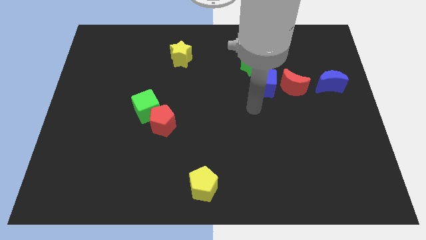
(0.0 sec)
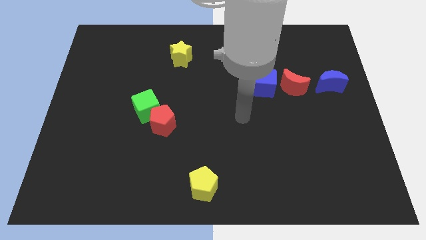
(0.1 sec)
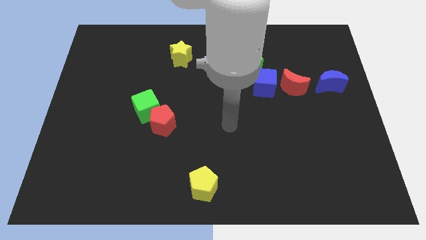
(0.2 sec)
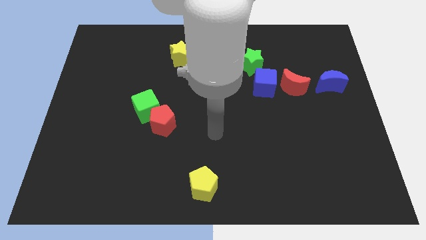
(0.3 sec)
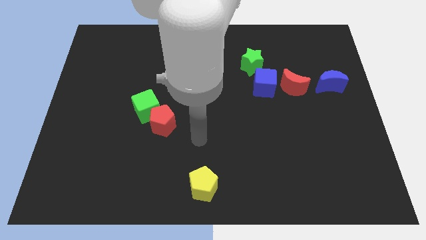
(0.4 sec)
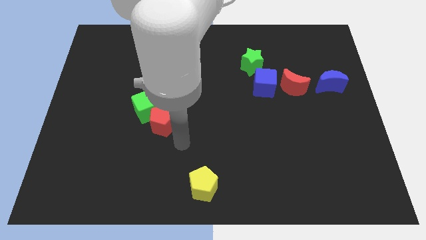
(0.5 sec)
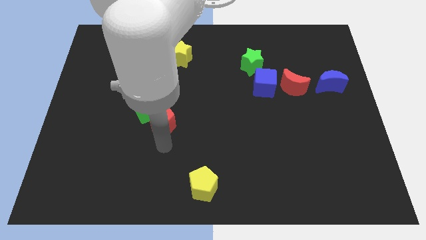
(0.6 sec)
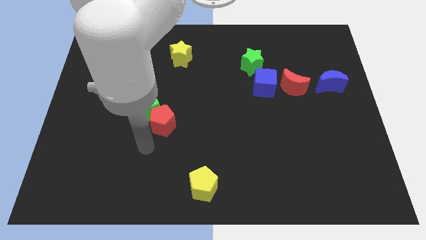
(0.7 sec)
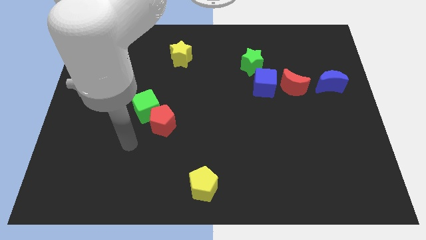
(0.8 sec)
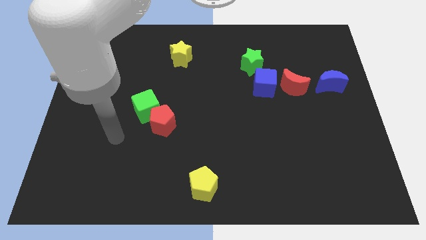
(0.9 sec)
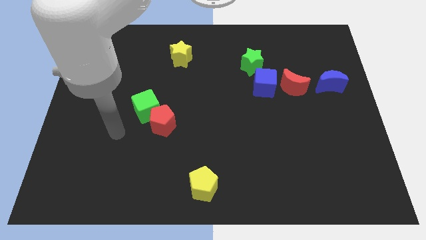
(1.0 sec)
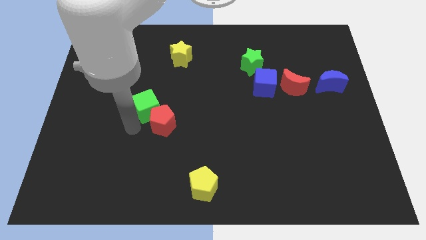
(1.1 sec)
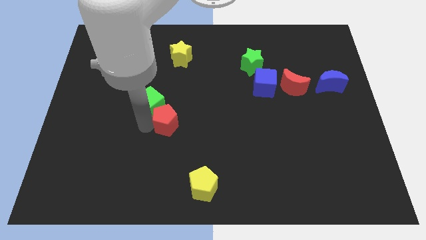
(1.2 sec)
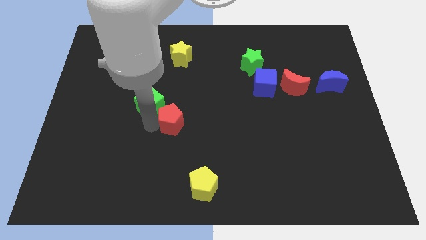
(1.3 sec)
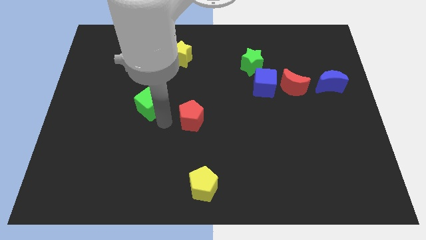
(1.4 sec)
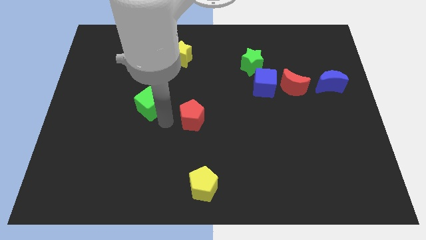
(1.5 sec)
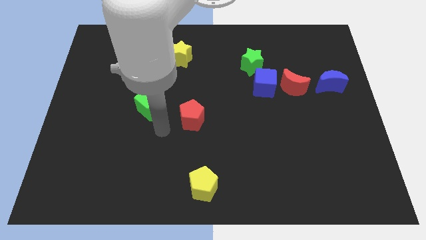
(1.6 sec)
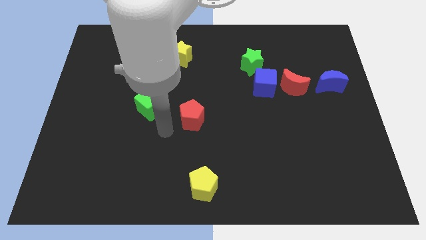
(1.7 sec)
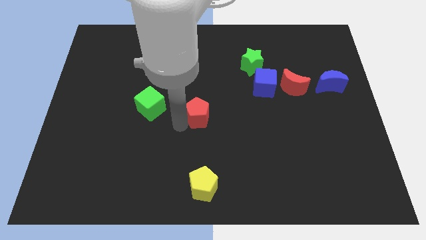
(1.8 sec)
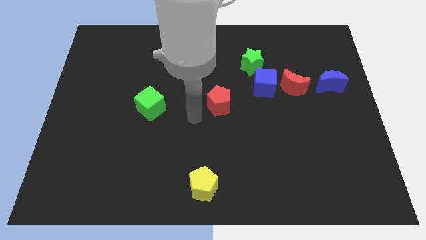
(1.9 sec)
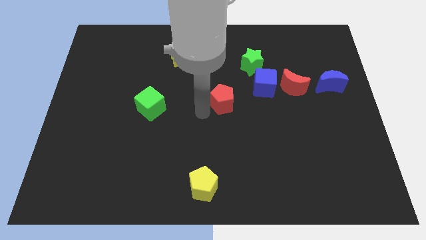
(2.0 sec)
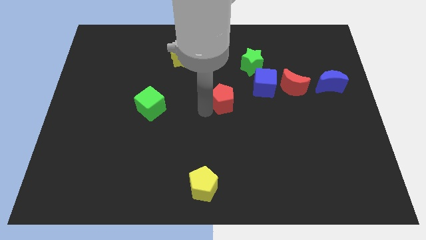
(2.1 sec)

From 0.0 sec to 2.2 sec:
separate the red pentagon from green cube

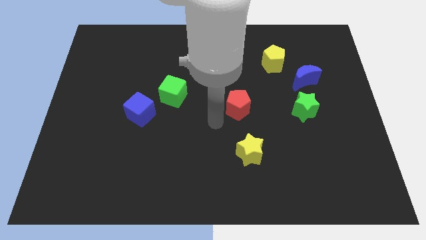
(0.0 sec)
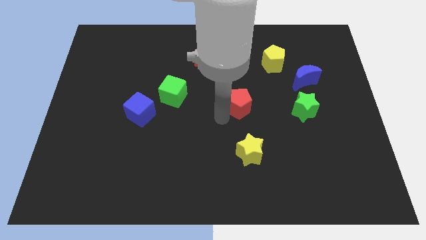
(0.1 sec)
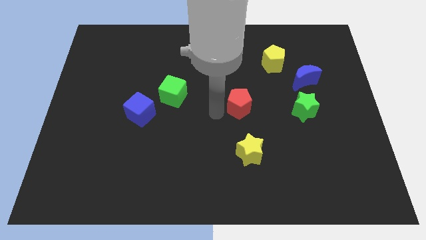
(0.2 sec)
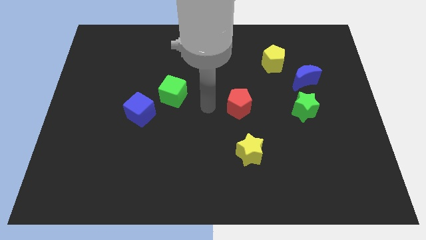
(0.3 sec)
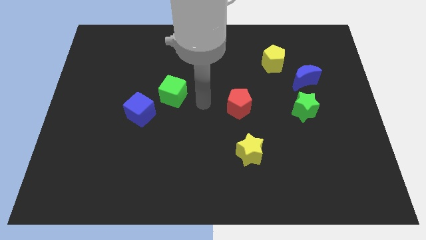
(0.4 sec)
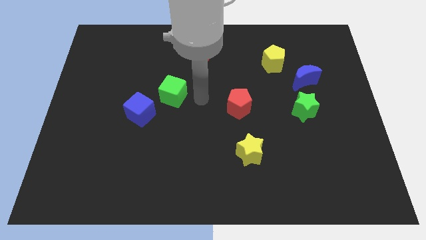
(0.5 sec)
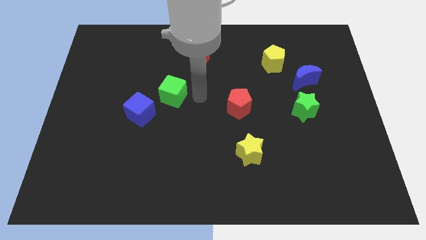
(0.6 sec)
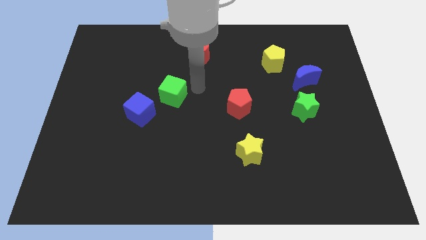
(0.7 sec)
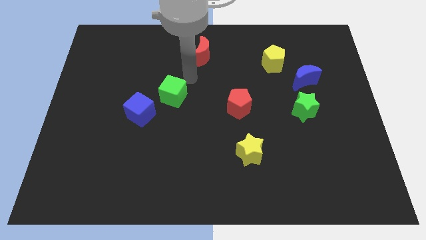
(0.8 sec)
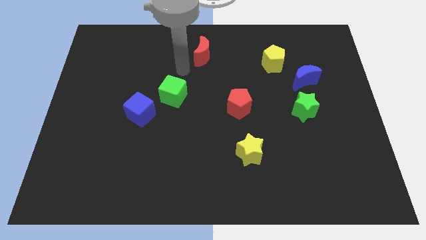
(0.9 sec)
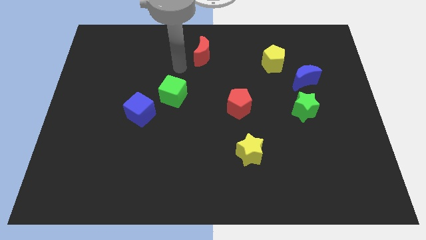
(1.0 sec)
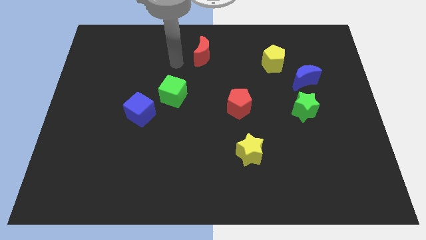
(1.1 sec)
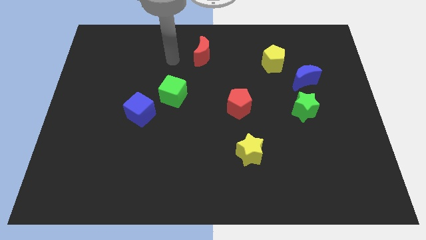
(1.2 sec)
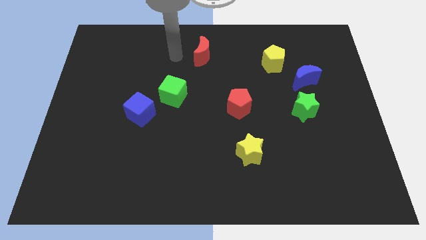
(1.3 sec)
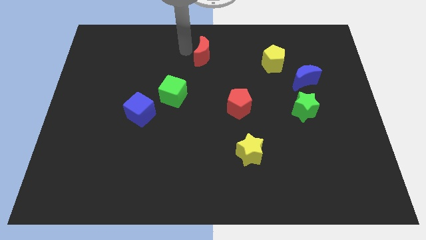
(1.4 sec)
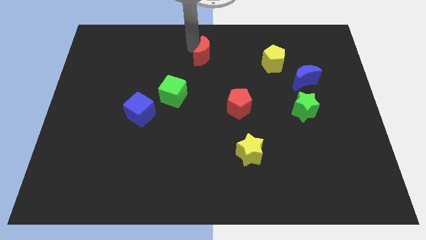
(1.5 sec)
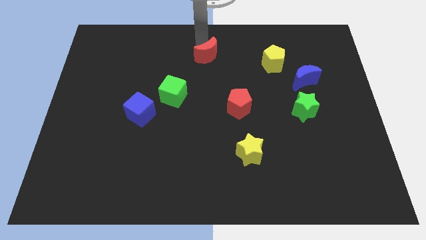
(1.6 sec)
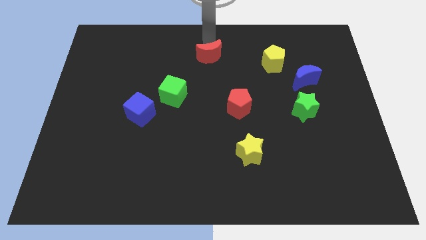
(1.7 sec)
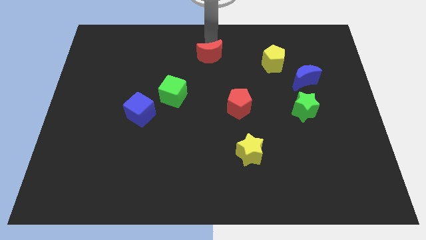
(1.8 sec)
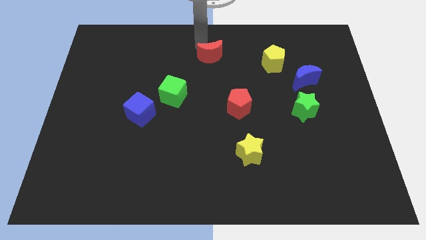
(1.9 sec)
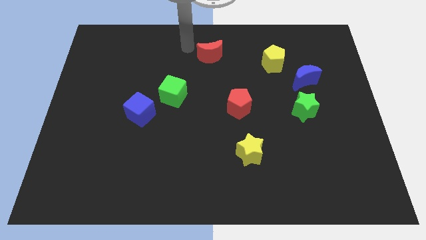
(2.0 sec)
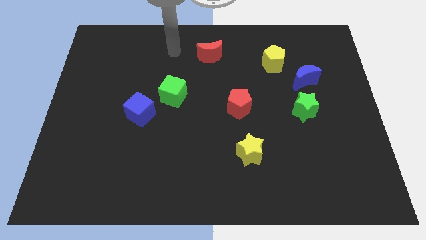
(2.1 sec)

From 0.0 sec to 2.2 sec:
slightly tap the red crescent

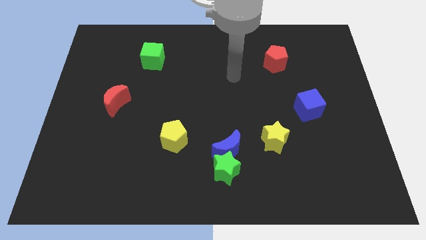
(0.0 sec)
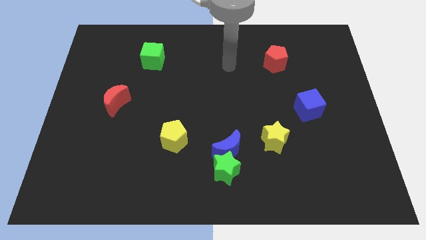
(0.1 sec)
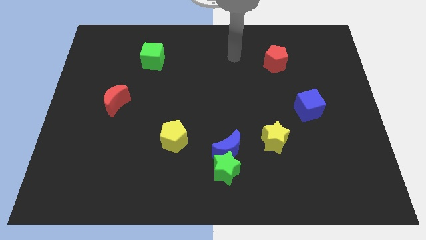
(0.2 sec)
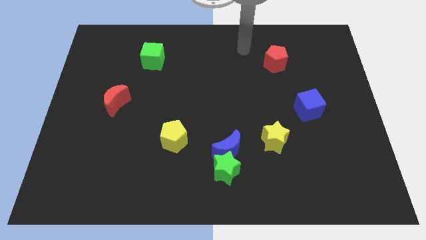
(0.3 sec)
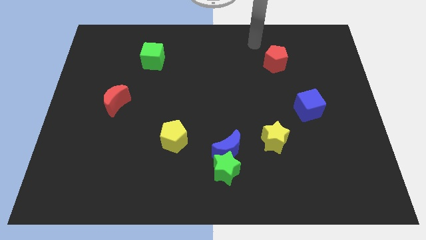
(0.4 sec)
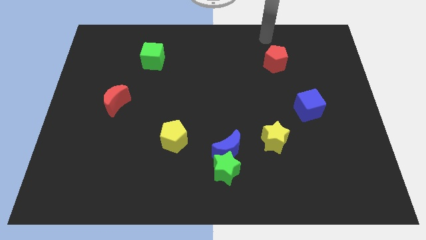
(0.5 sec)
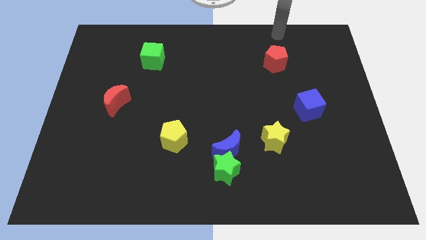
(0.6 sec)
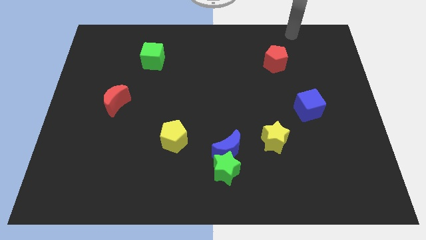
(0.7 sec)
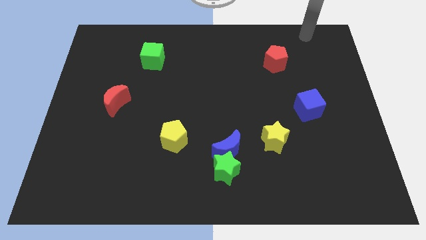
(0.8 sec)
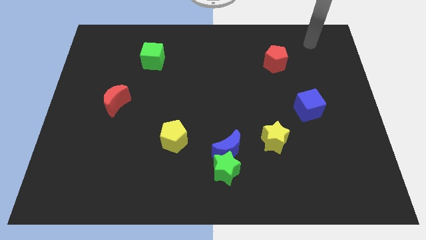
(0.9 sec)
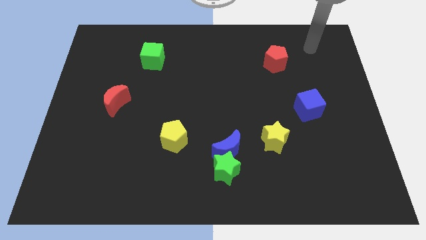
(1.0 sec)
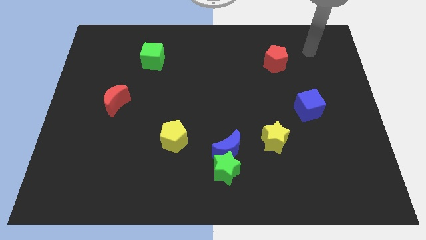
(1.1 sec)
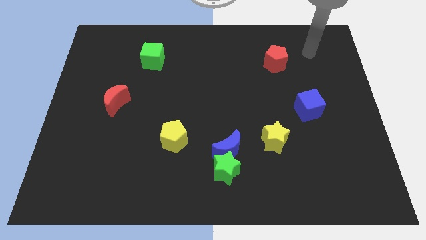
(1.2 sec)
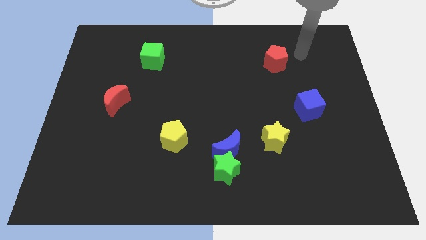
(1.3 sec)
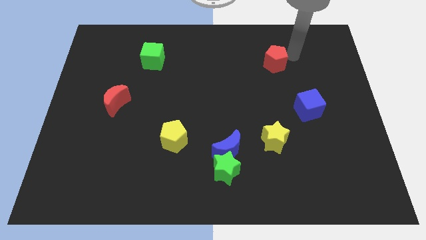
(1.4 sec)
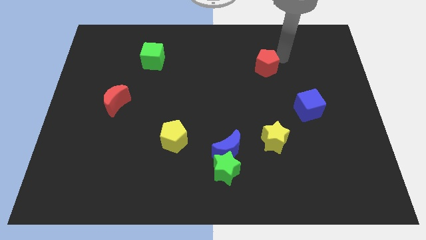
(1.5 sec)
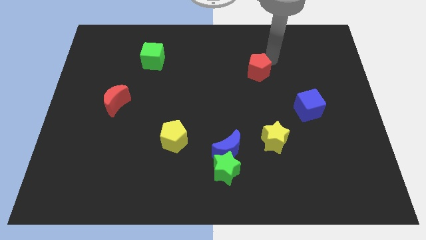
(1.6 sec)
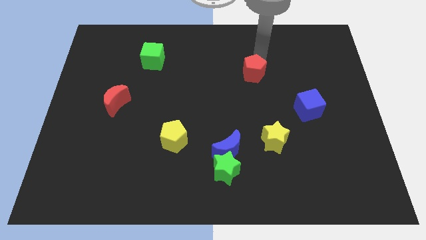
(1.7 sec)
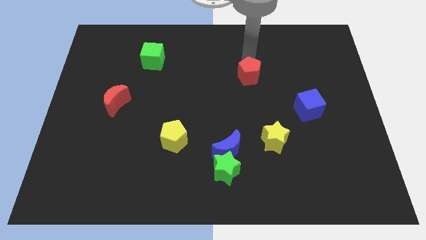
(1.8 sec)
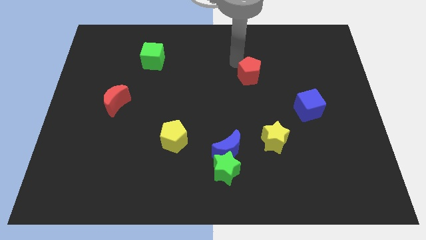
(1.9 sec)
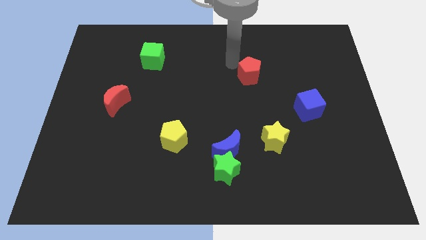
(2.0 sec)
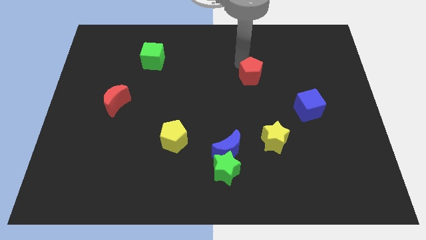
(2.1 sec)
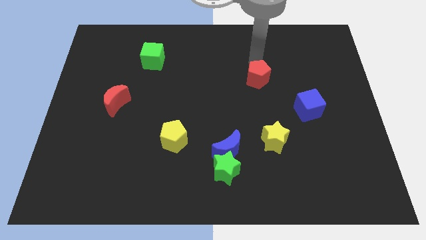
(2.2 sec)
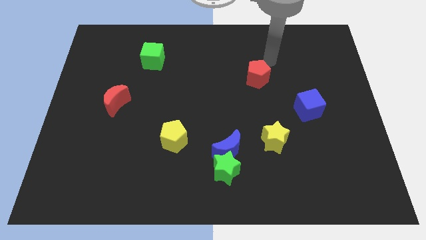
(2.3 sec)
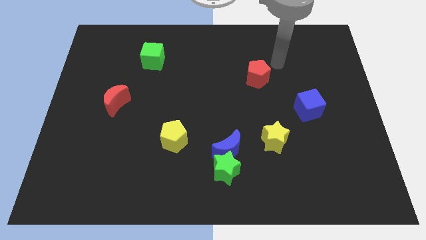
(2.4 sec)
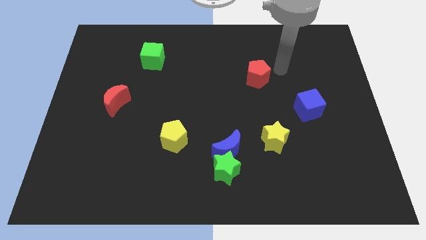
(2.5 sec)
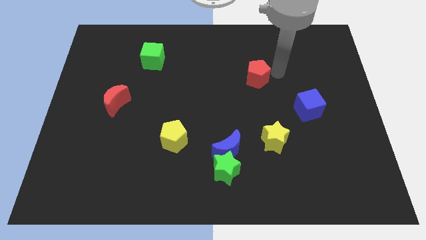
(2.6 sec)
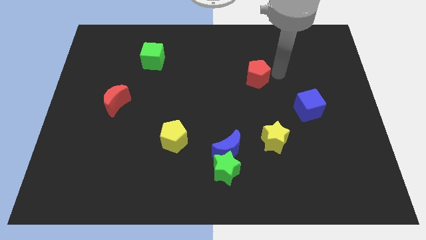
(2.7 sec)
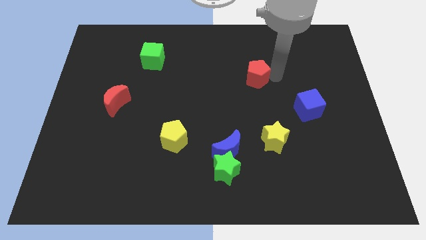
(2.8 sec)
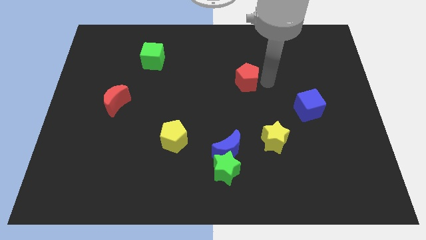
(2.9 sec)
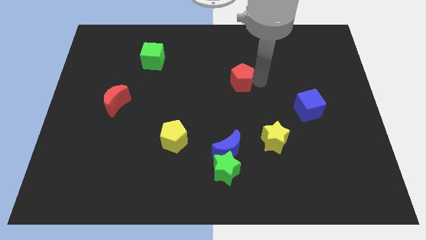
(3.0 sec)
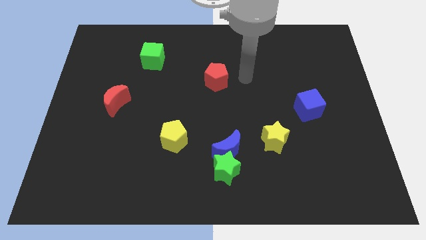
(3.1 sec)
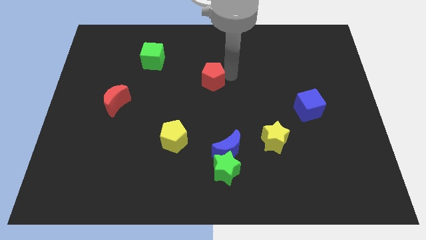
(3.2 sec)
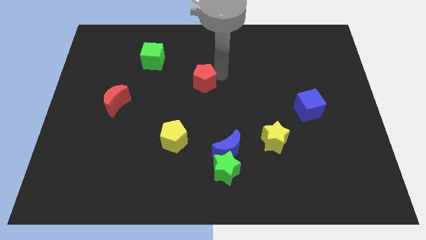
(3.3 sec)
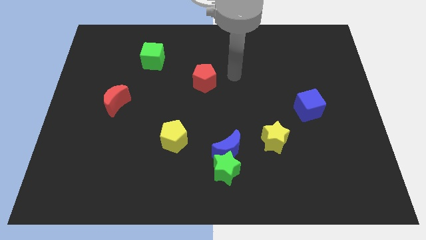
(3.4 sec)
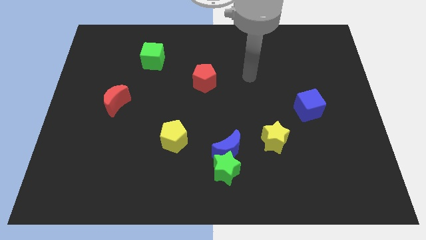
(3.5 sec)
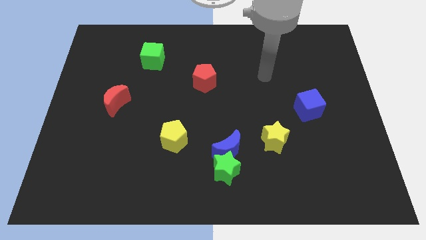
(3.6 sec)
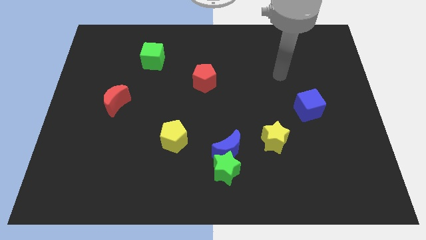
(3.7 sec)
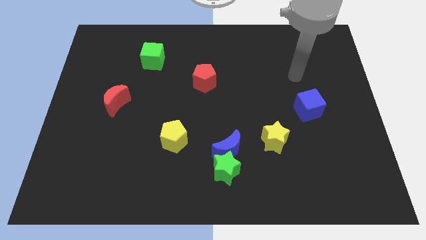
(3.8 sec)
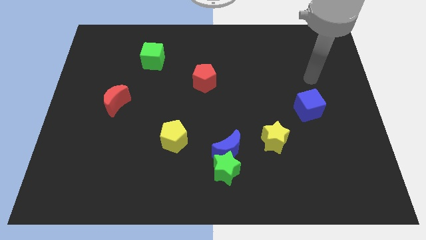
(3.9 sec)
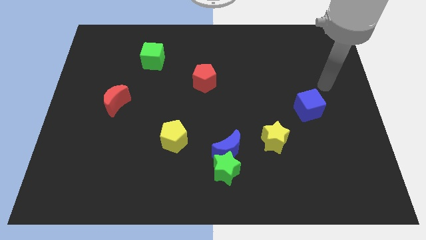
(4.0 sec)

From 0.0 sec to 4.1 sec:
push the red pentagon closer to the red moon

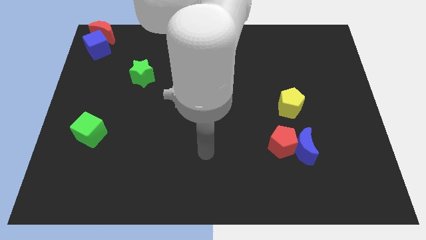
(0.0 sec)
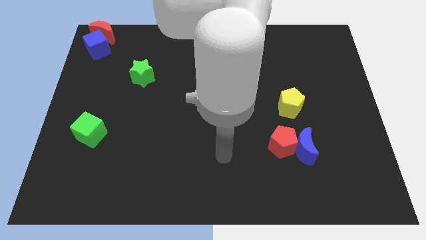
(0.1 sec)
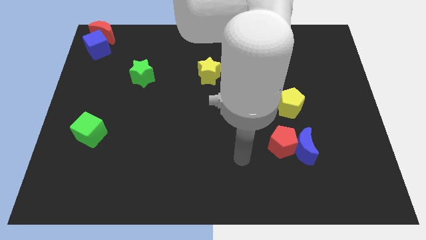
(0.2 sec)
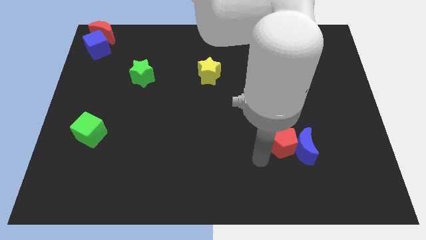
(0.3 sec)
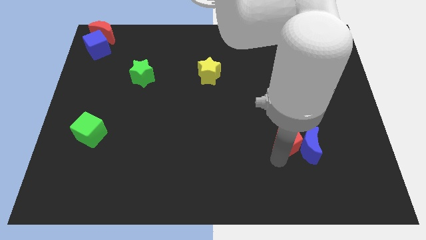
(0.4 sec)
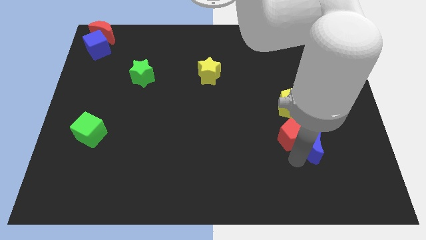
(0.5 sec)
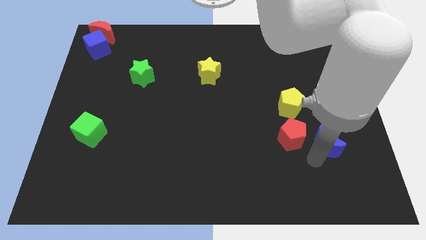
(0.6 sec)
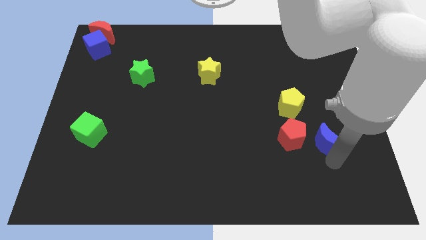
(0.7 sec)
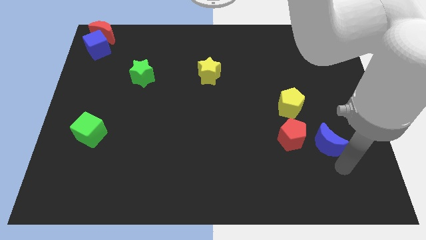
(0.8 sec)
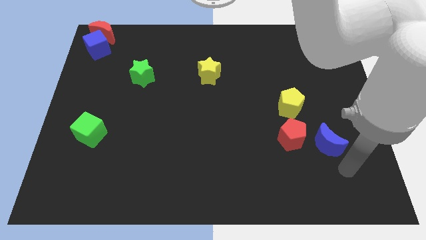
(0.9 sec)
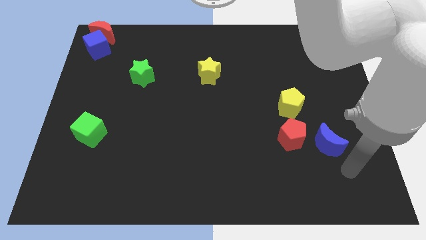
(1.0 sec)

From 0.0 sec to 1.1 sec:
separate the blue crescent from red pentagon
